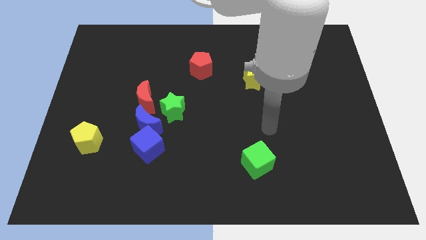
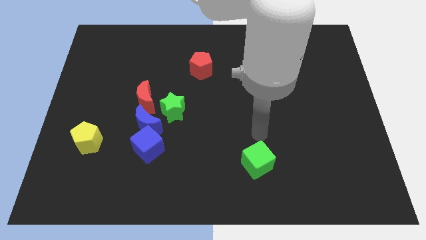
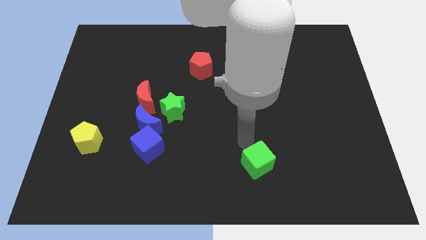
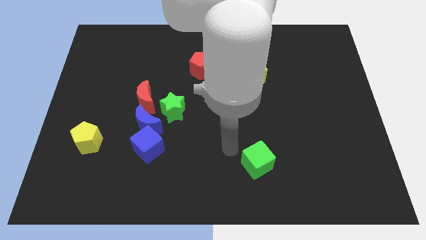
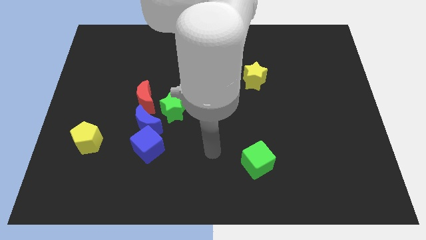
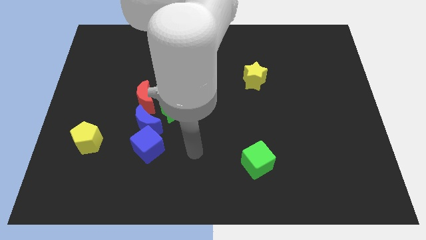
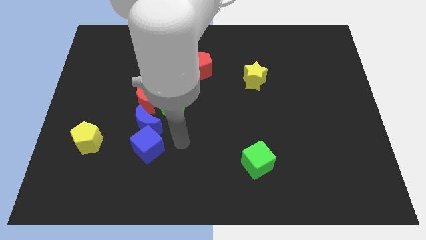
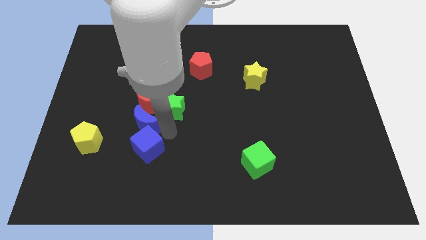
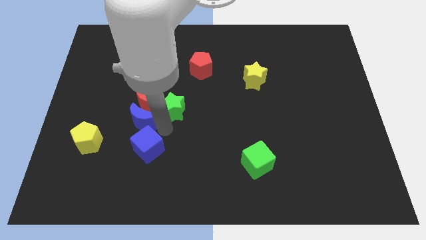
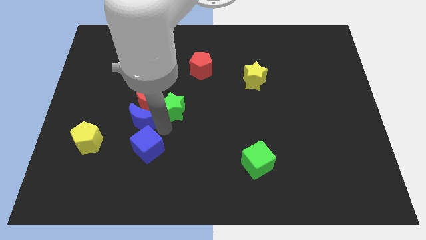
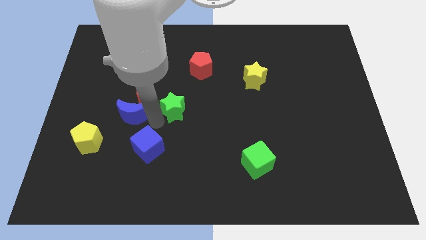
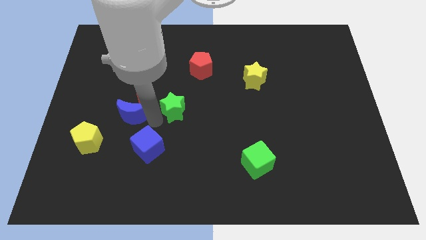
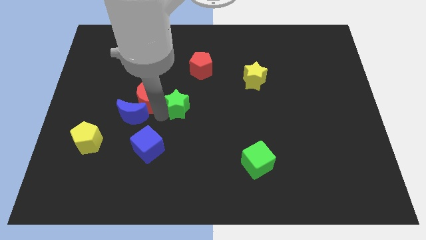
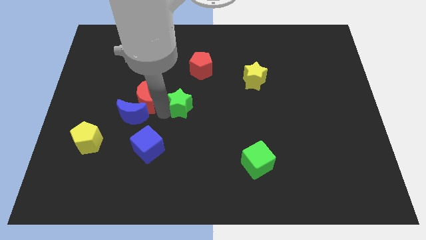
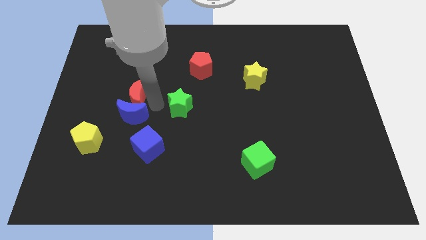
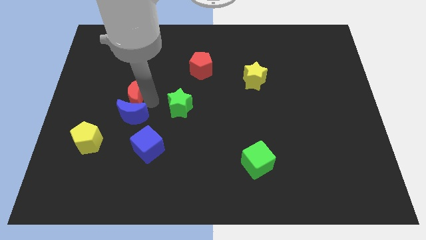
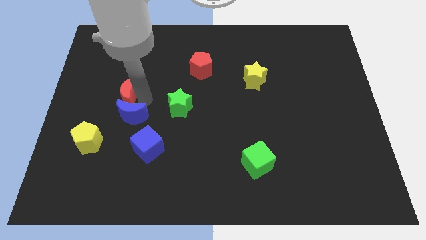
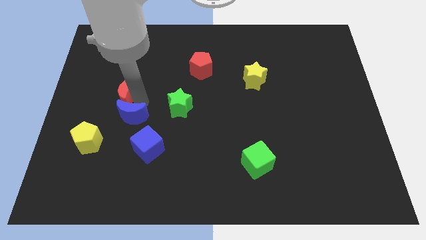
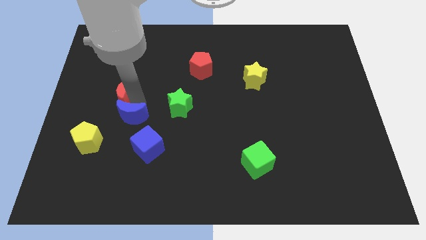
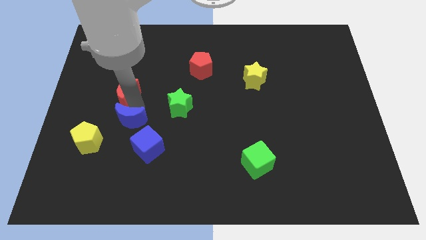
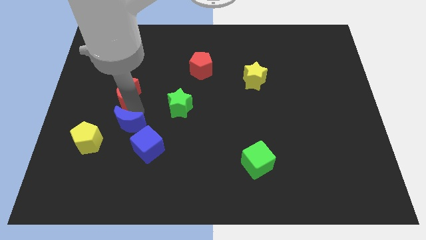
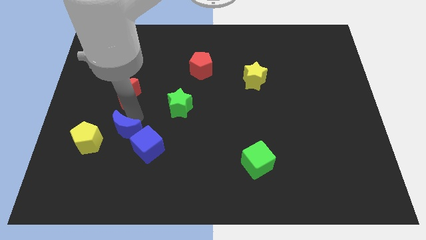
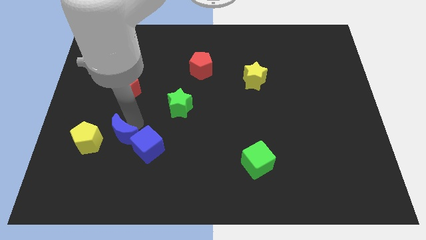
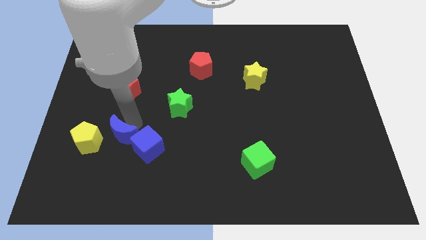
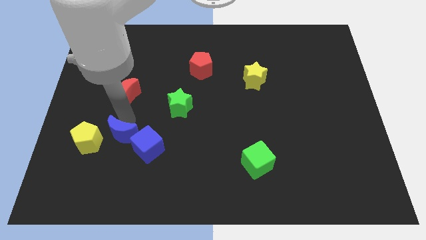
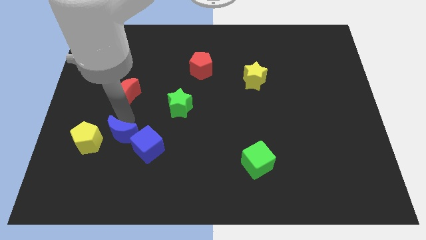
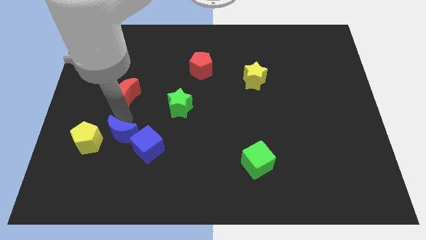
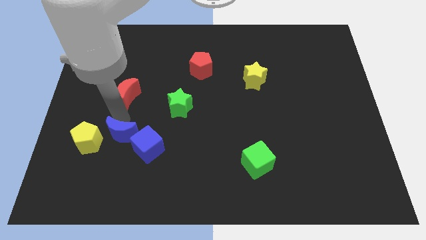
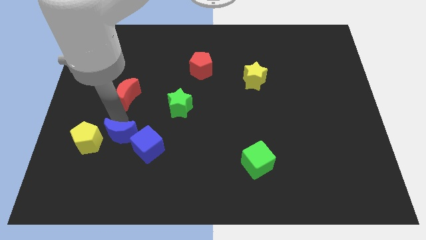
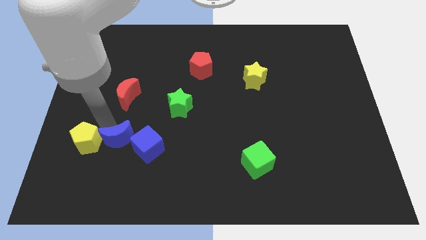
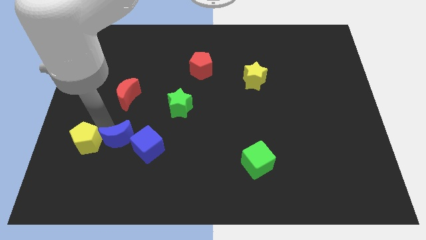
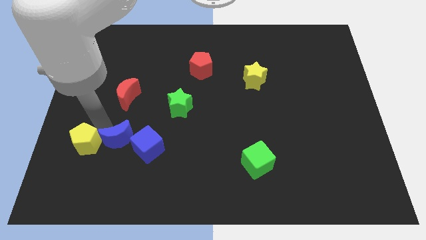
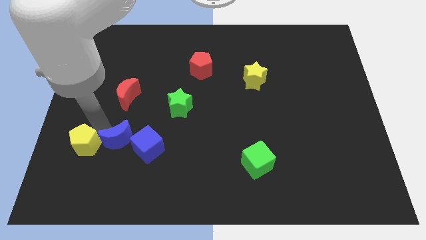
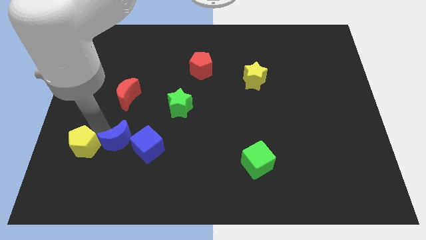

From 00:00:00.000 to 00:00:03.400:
move the blue moon close to the blue cube

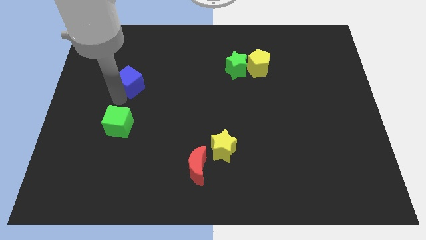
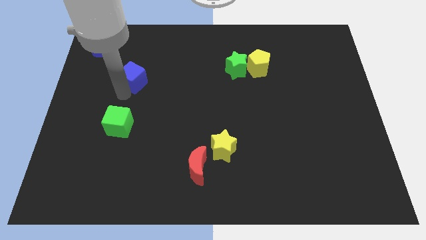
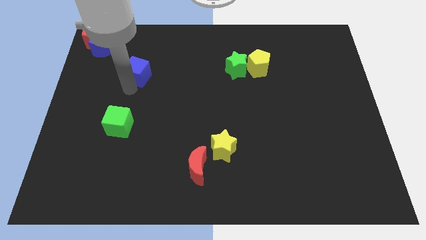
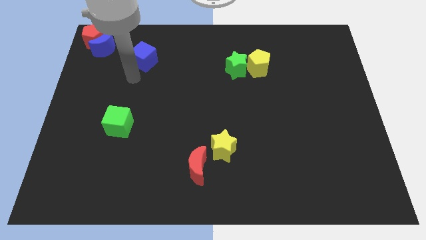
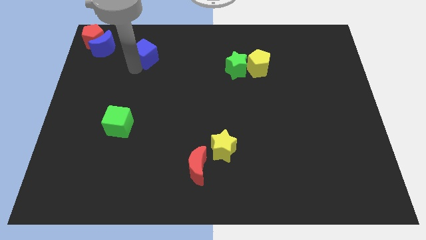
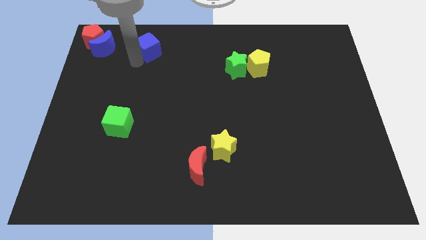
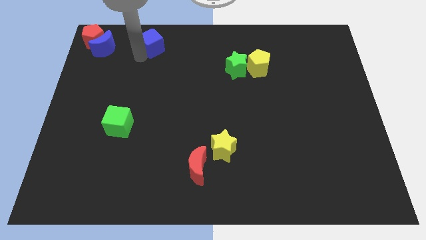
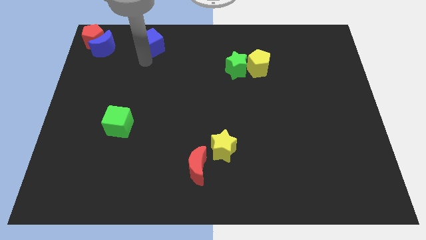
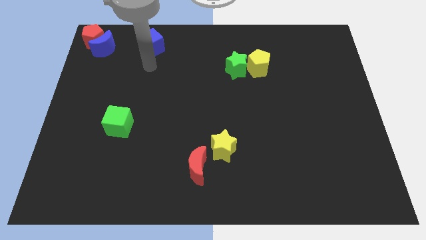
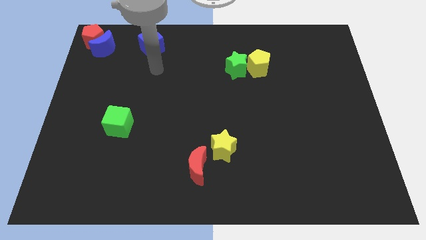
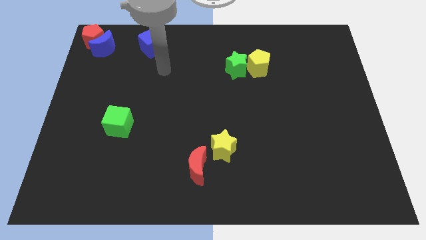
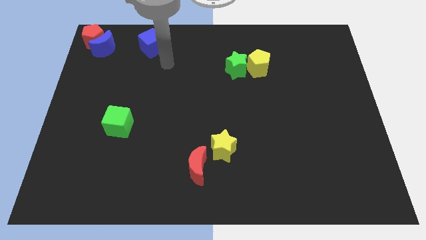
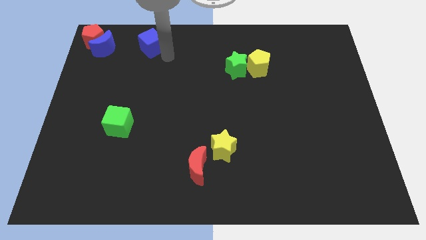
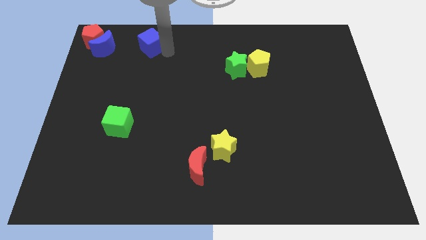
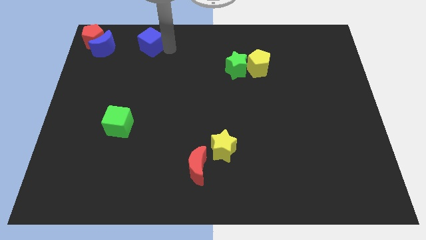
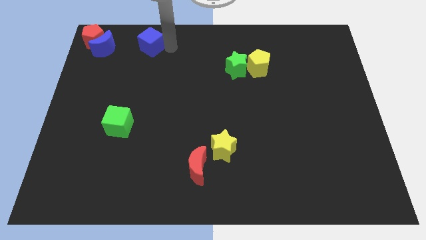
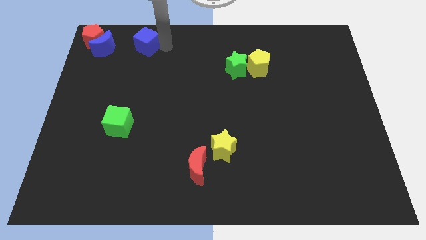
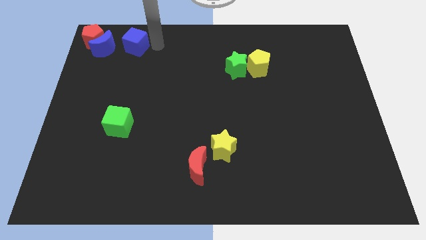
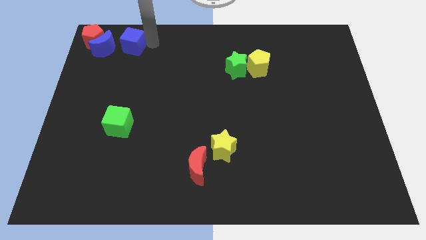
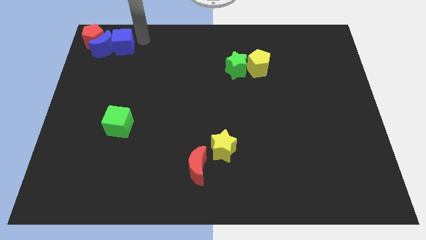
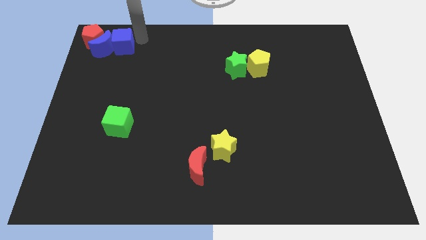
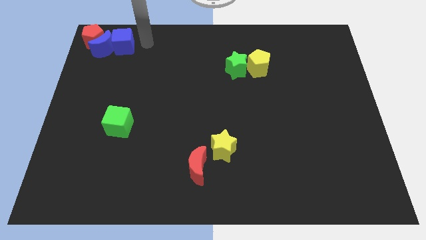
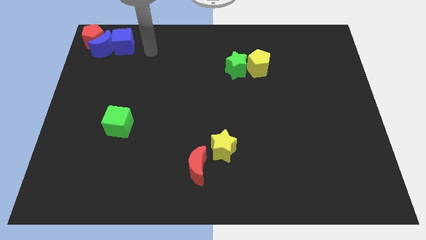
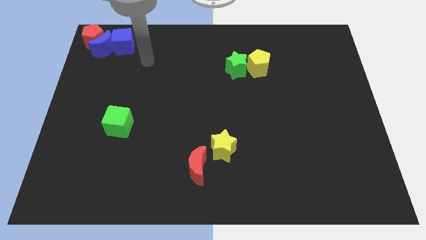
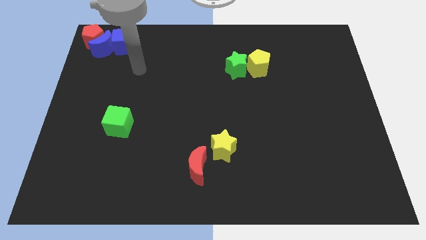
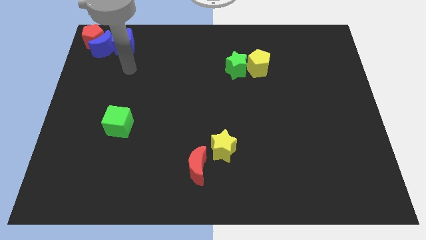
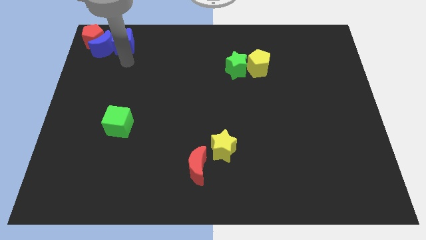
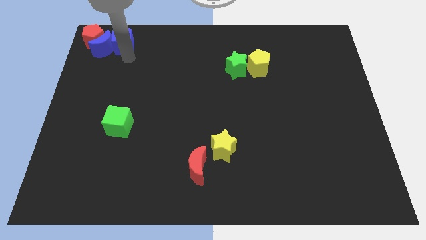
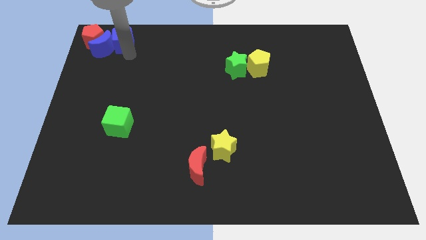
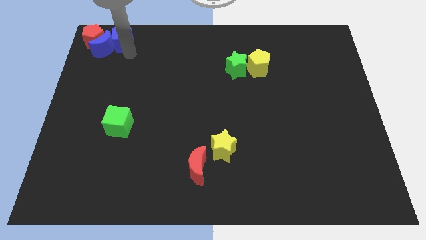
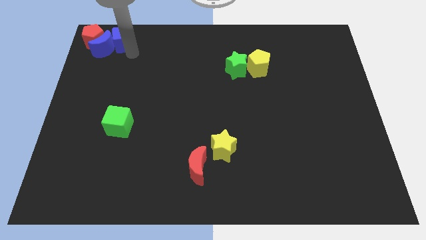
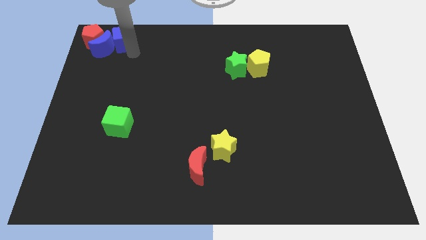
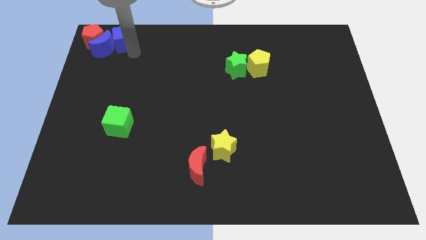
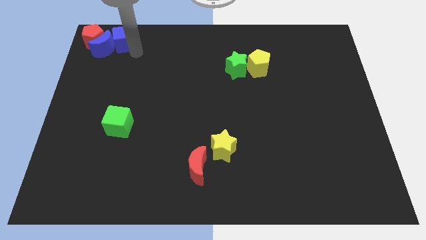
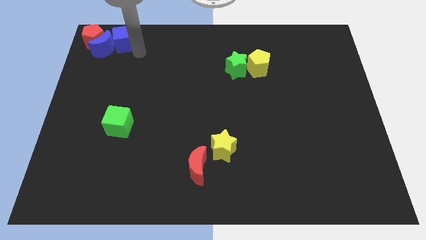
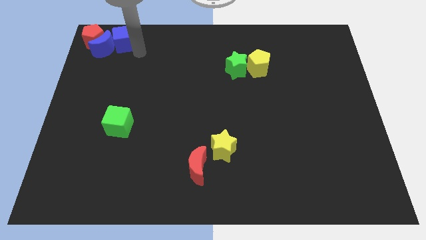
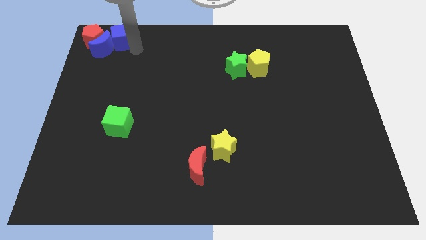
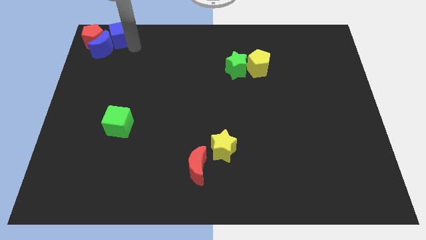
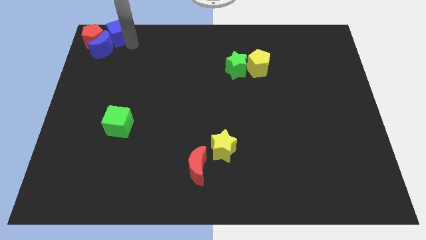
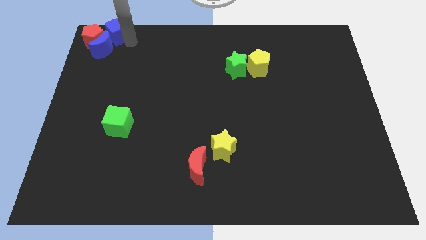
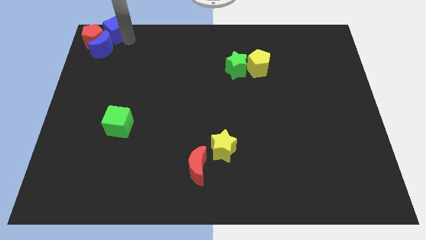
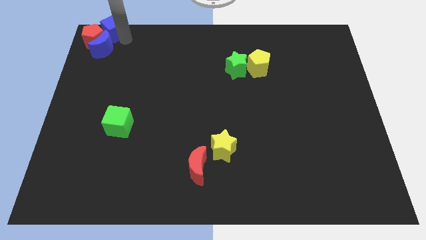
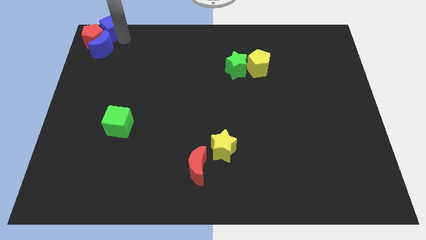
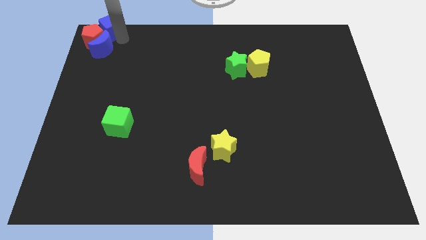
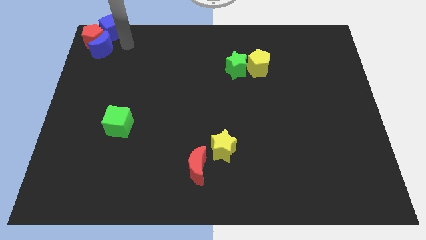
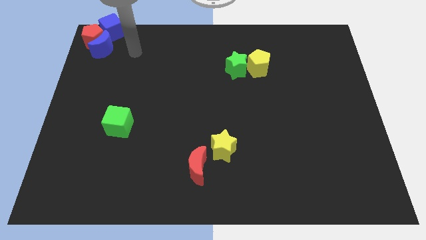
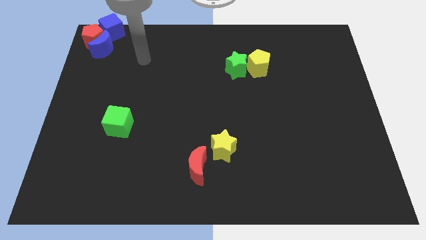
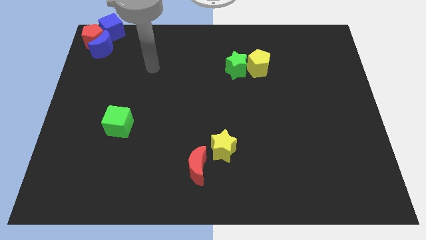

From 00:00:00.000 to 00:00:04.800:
move the blue cube to the top right of the red pentagon

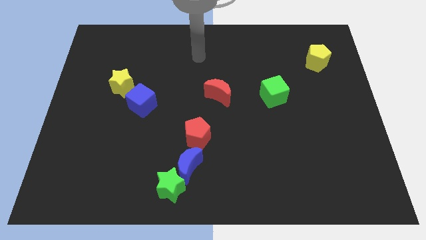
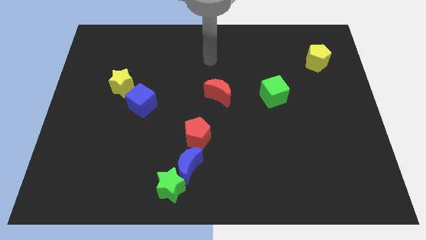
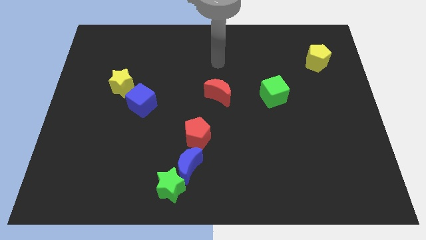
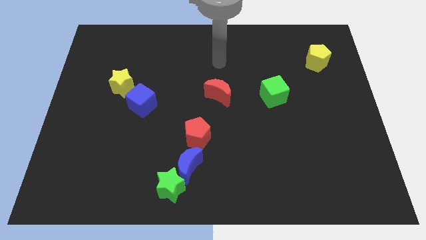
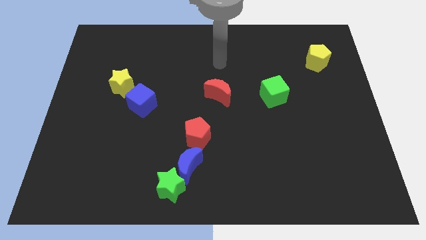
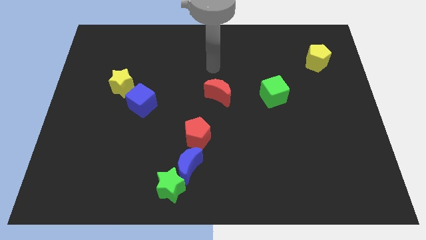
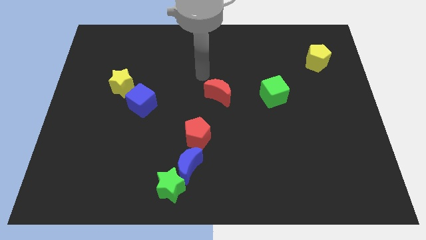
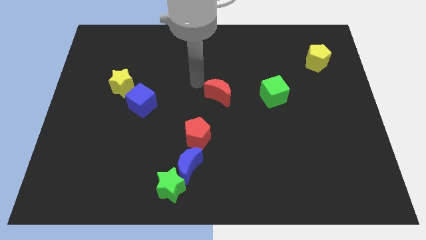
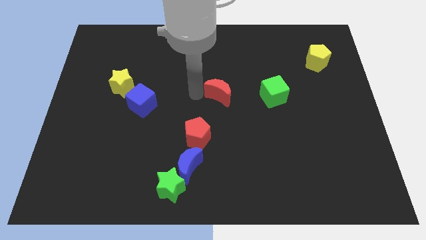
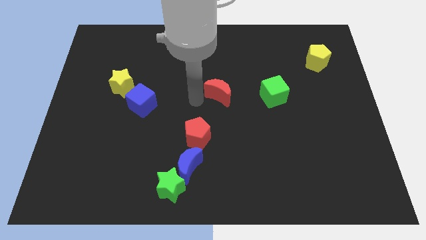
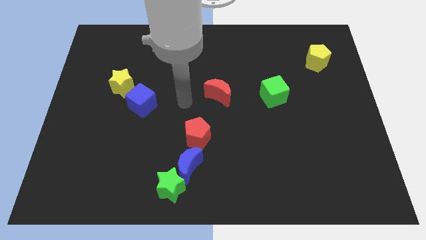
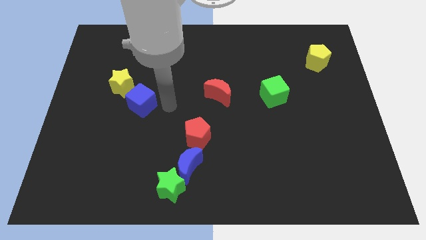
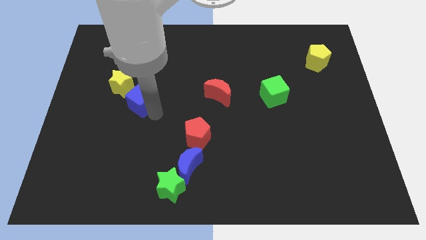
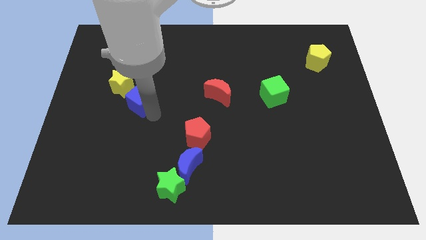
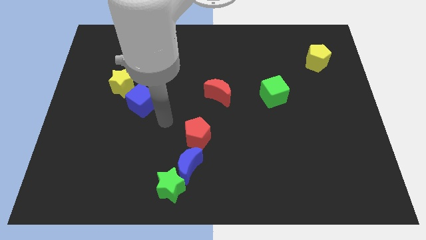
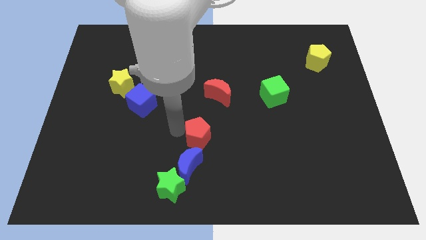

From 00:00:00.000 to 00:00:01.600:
place the arm to the left of red pentagon
